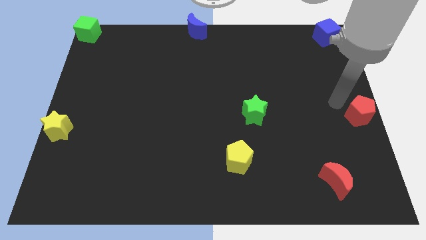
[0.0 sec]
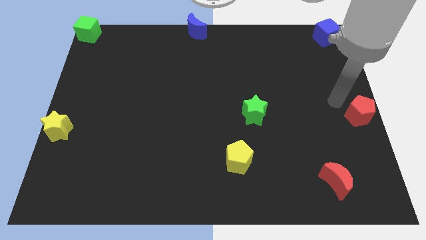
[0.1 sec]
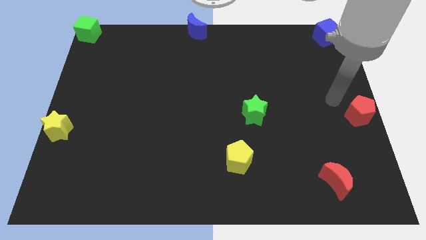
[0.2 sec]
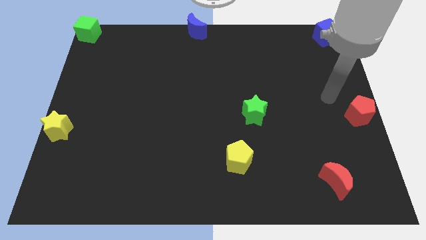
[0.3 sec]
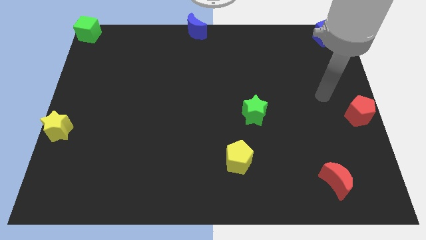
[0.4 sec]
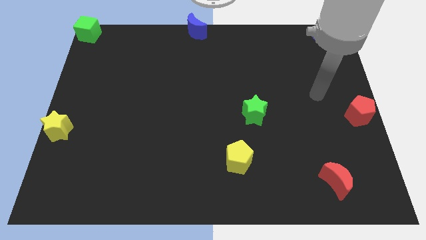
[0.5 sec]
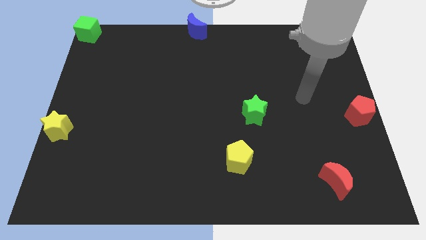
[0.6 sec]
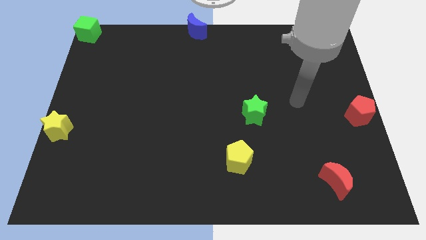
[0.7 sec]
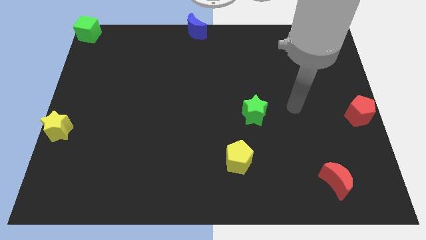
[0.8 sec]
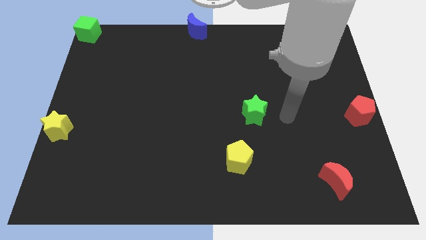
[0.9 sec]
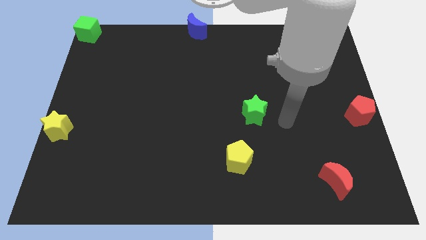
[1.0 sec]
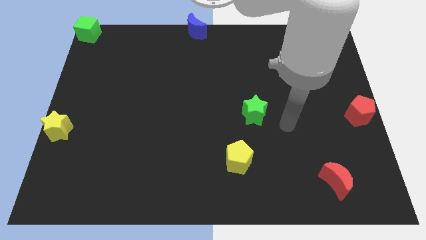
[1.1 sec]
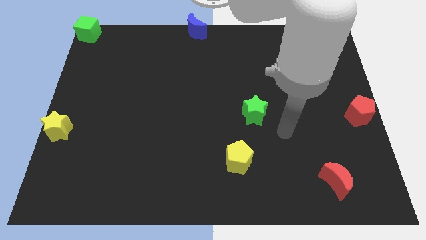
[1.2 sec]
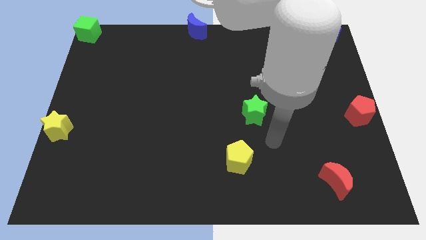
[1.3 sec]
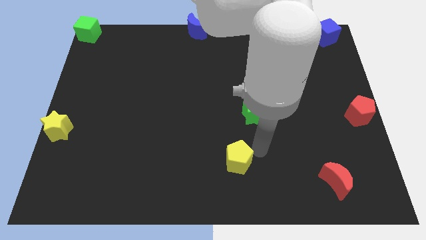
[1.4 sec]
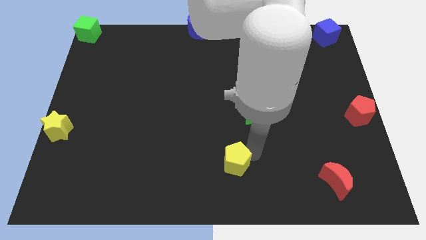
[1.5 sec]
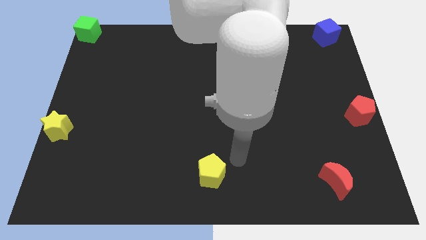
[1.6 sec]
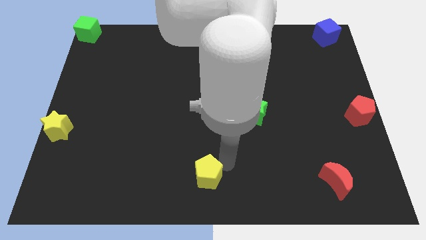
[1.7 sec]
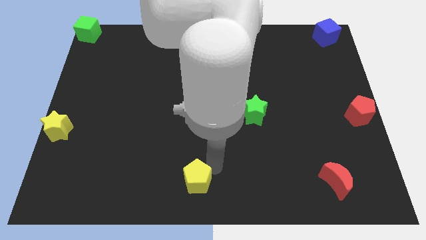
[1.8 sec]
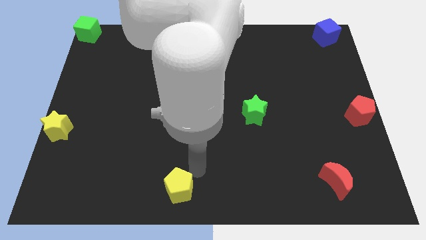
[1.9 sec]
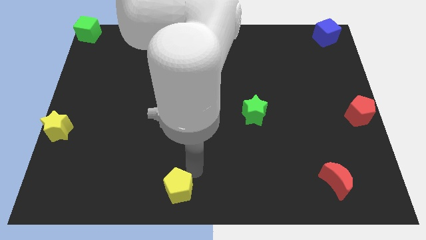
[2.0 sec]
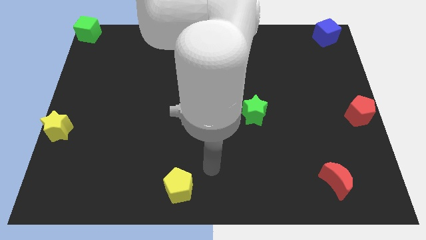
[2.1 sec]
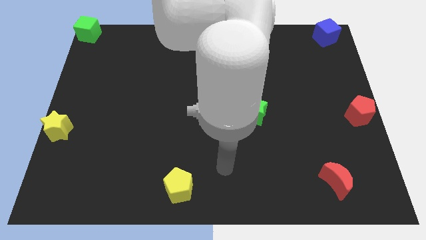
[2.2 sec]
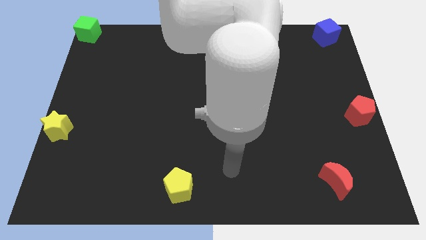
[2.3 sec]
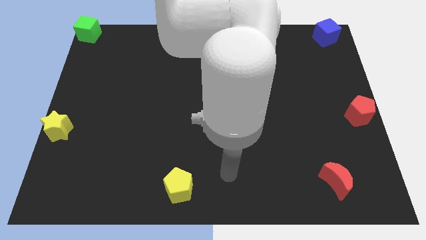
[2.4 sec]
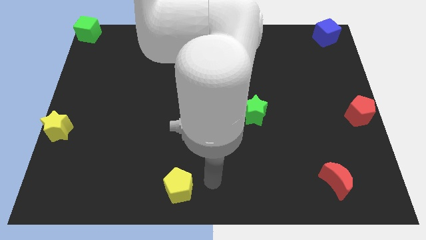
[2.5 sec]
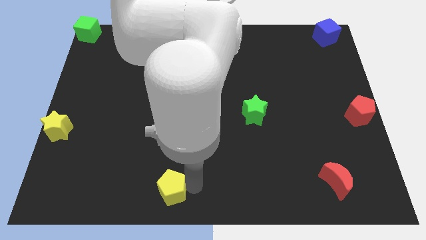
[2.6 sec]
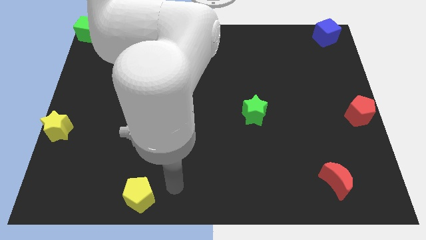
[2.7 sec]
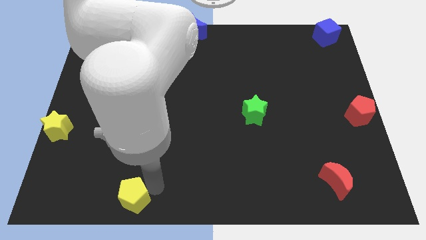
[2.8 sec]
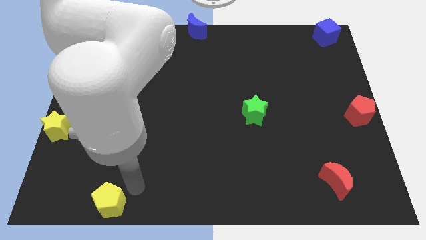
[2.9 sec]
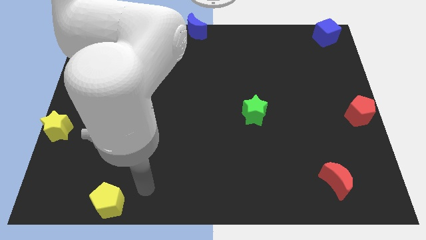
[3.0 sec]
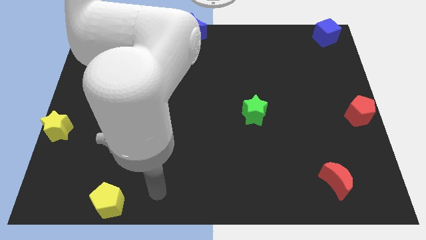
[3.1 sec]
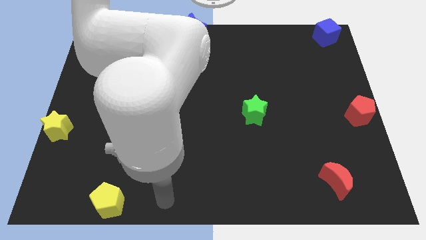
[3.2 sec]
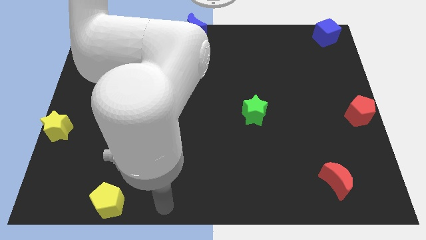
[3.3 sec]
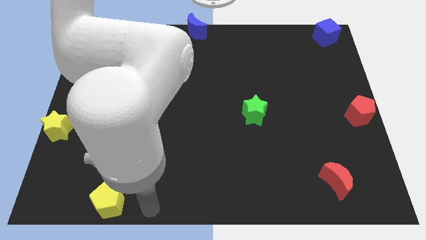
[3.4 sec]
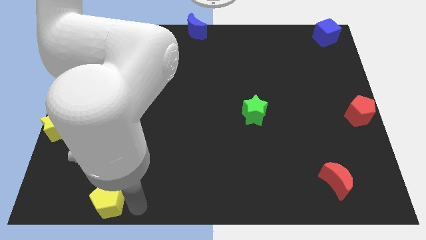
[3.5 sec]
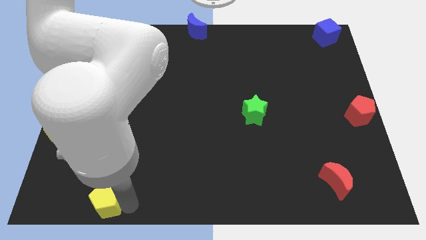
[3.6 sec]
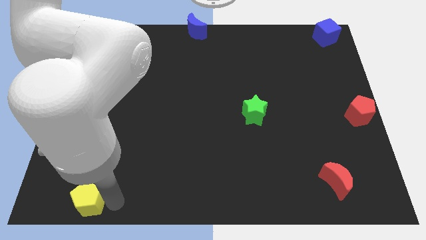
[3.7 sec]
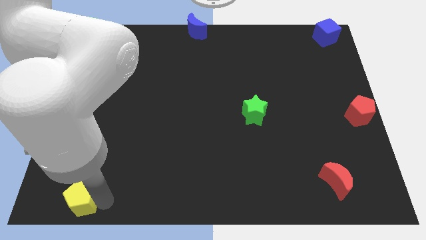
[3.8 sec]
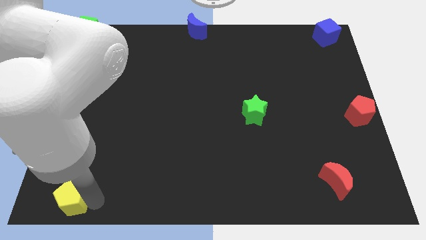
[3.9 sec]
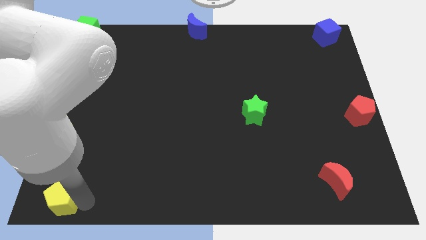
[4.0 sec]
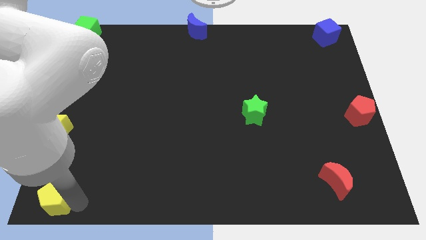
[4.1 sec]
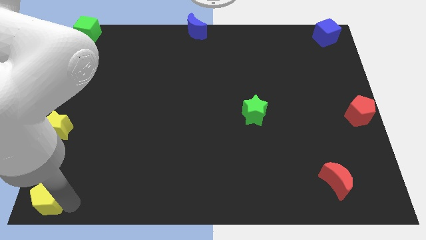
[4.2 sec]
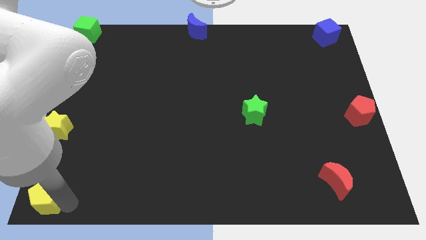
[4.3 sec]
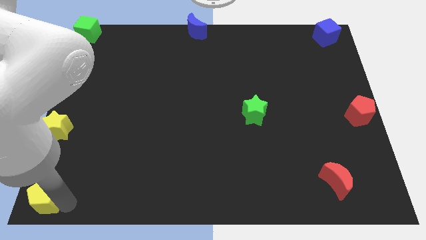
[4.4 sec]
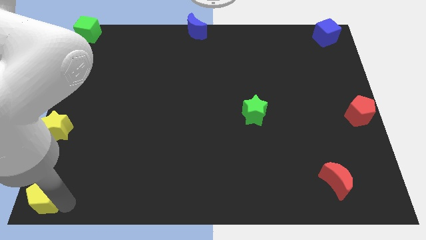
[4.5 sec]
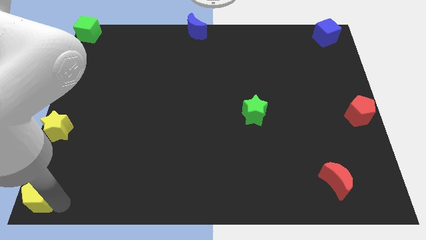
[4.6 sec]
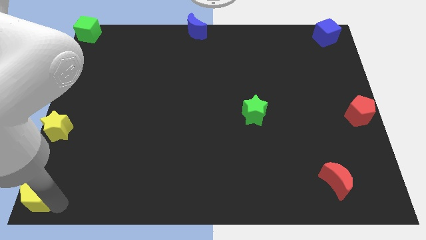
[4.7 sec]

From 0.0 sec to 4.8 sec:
place the yellow pentagon to the bottom left corner of the board

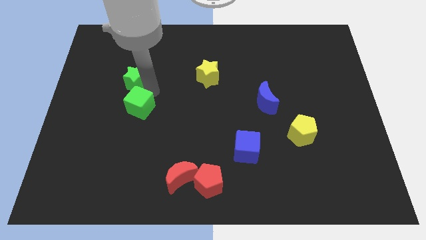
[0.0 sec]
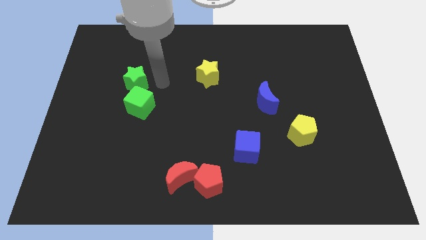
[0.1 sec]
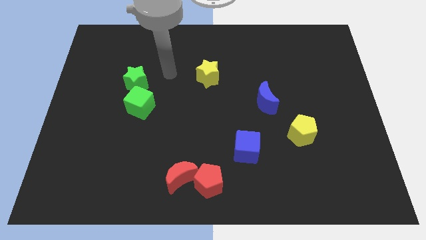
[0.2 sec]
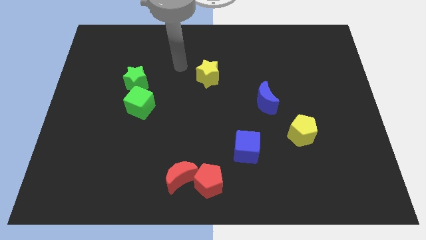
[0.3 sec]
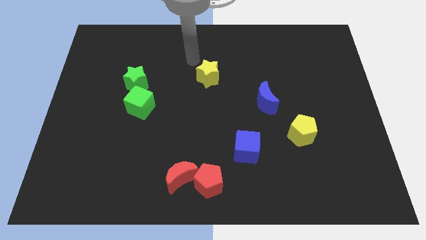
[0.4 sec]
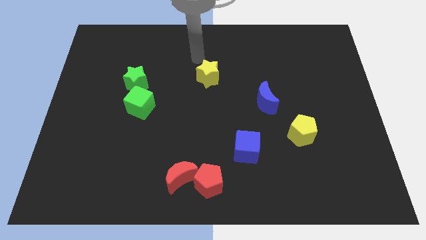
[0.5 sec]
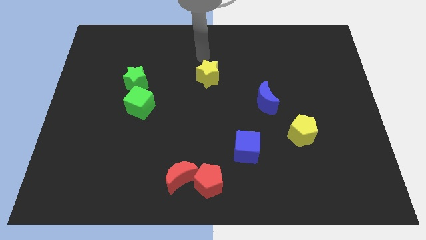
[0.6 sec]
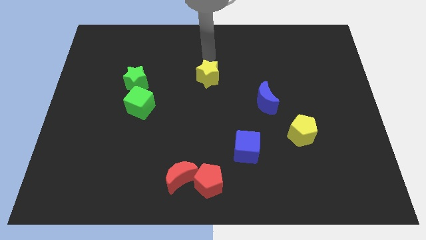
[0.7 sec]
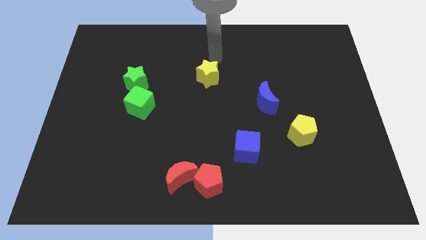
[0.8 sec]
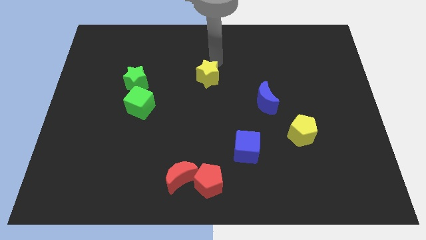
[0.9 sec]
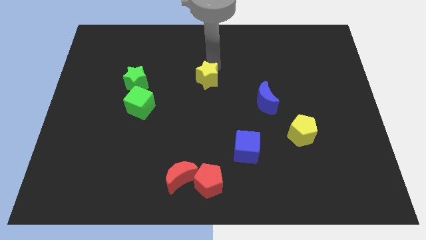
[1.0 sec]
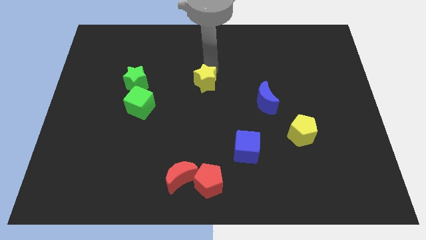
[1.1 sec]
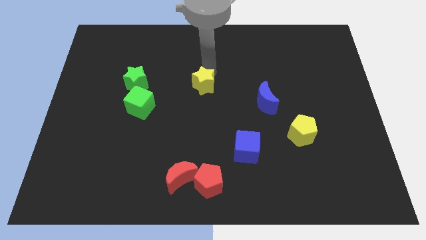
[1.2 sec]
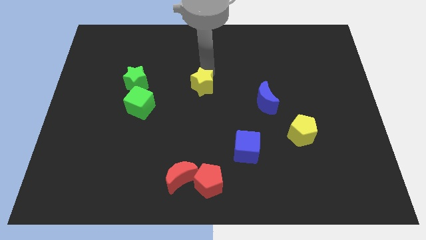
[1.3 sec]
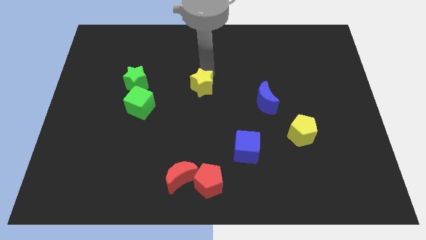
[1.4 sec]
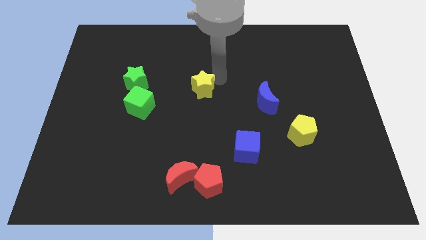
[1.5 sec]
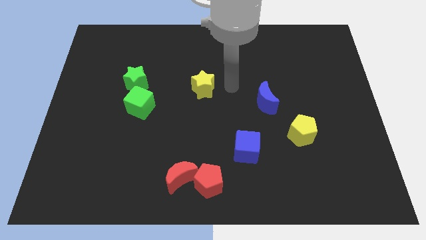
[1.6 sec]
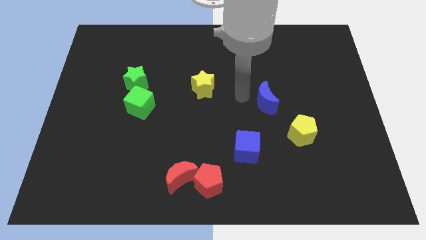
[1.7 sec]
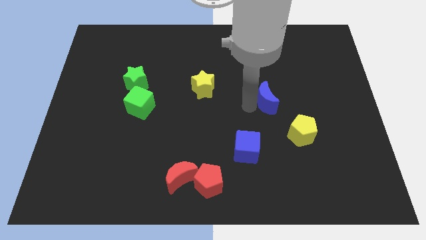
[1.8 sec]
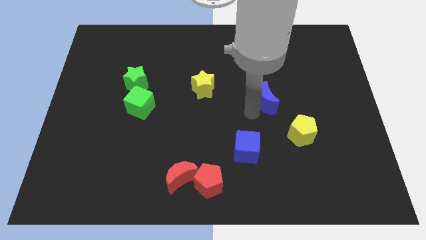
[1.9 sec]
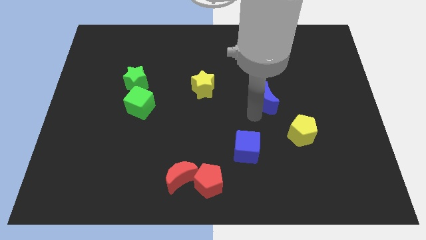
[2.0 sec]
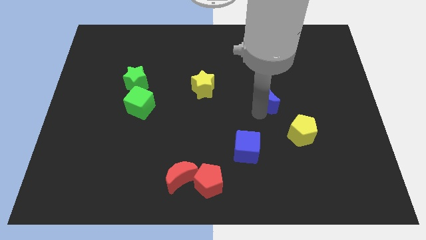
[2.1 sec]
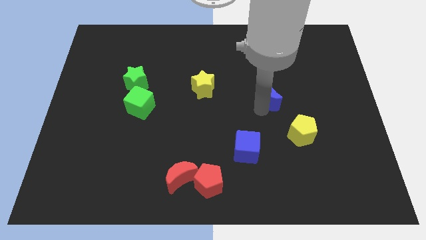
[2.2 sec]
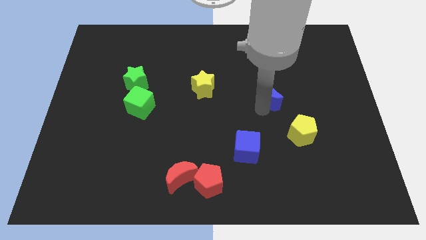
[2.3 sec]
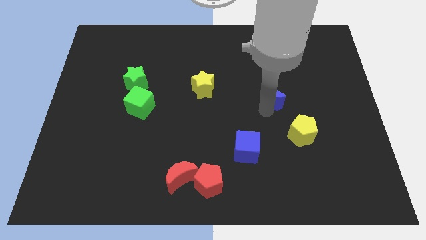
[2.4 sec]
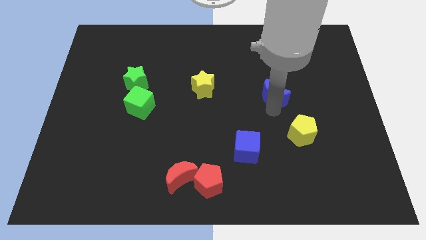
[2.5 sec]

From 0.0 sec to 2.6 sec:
move the yellow star between the right of green star and green cube

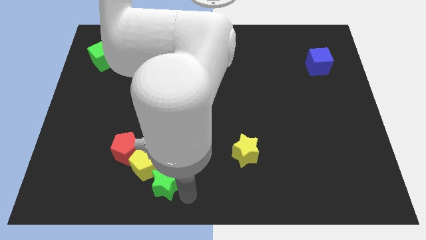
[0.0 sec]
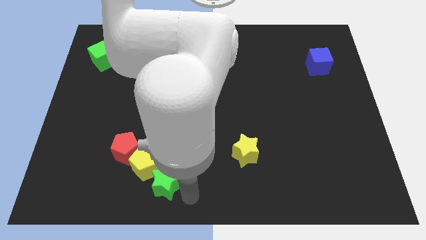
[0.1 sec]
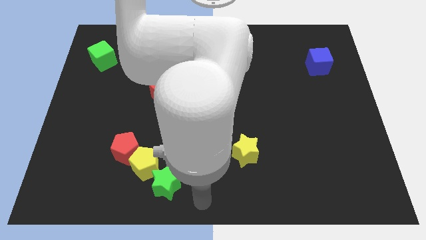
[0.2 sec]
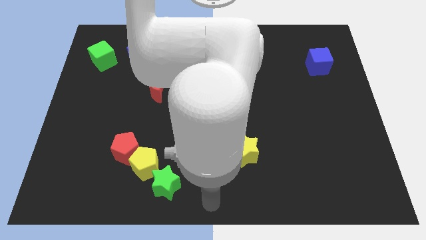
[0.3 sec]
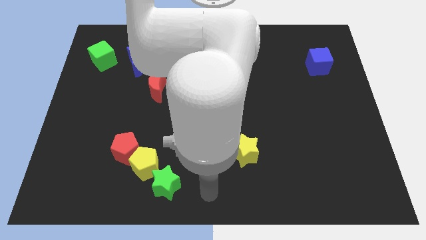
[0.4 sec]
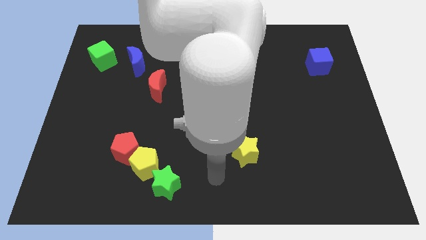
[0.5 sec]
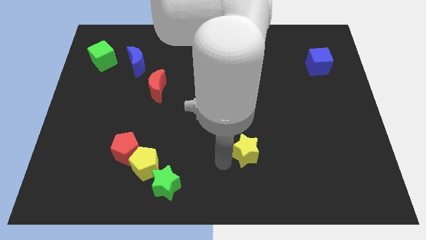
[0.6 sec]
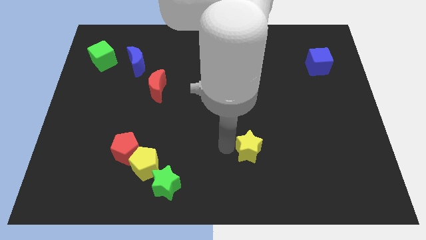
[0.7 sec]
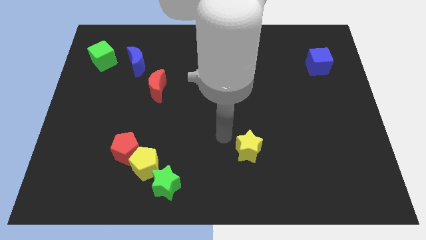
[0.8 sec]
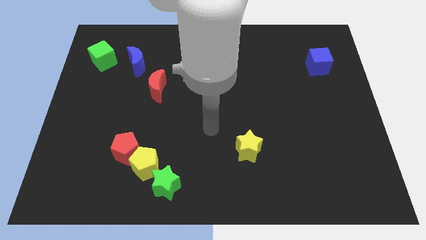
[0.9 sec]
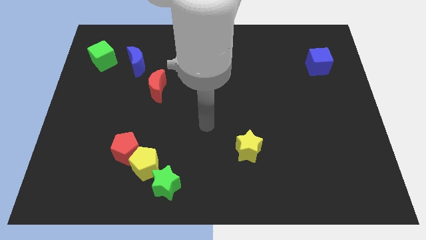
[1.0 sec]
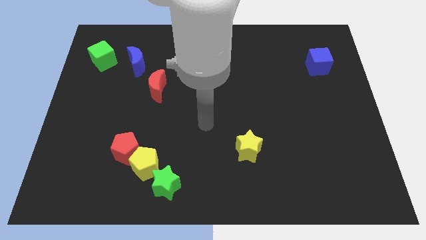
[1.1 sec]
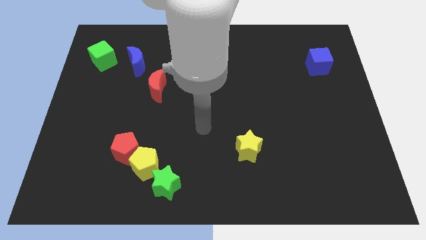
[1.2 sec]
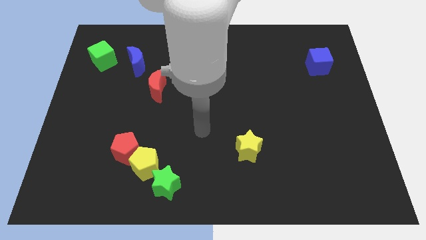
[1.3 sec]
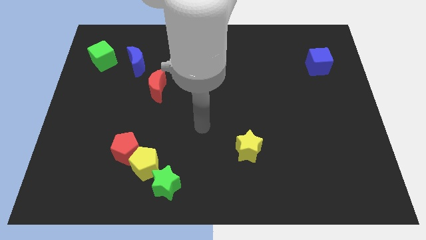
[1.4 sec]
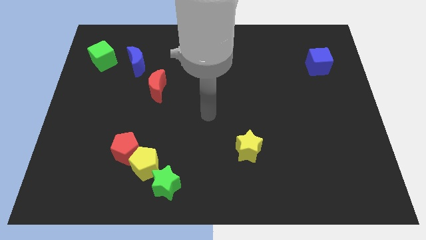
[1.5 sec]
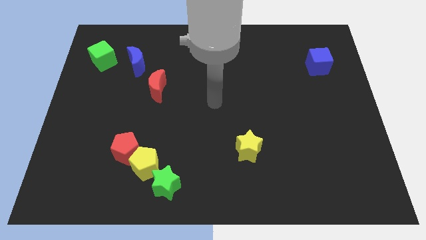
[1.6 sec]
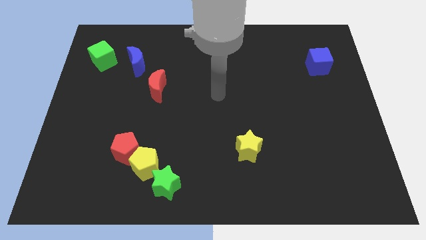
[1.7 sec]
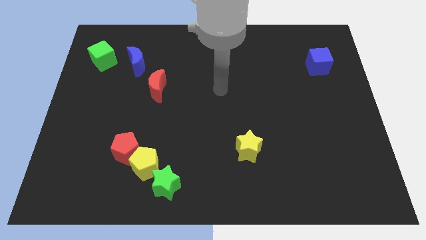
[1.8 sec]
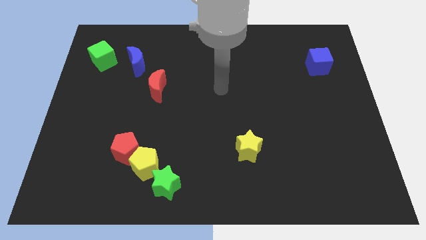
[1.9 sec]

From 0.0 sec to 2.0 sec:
place your arm at the center of the board
